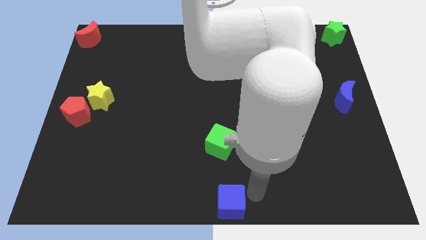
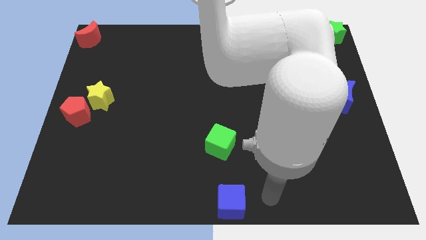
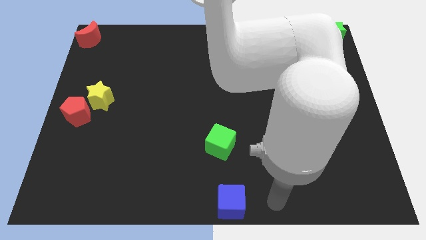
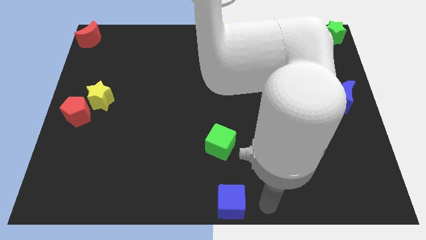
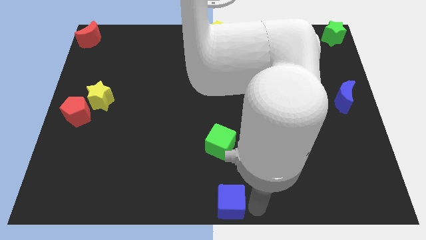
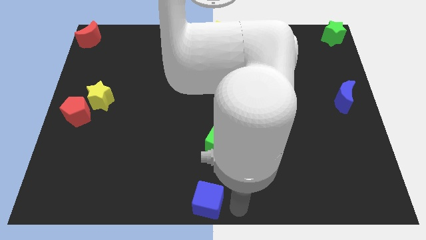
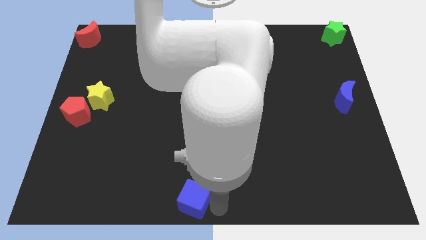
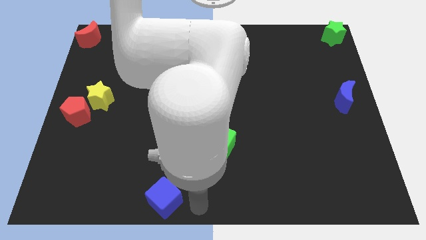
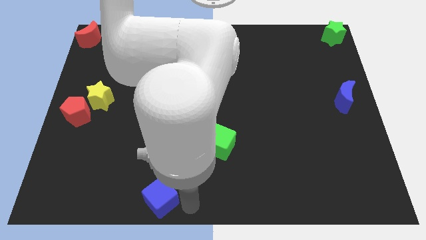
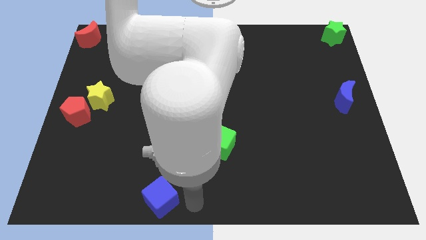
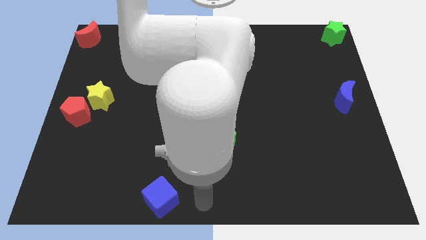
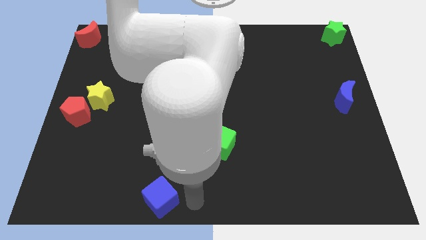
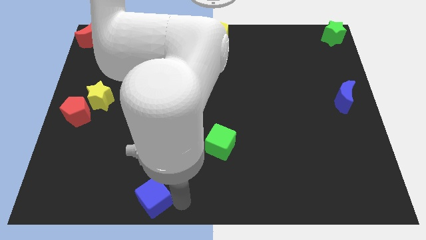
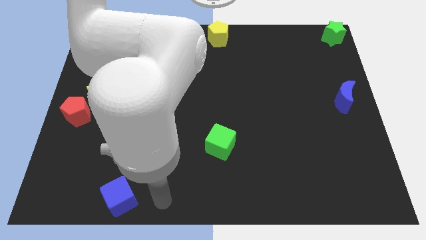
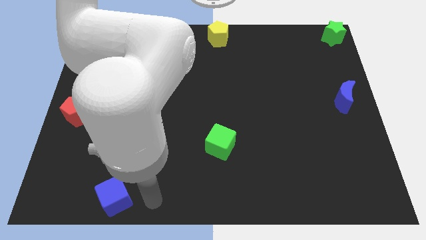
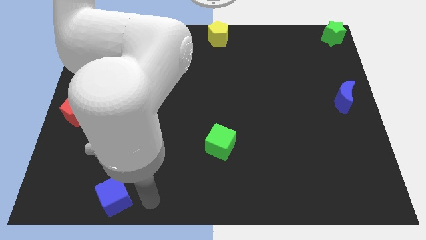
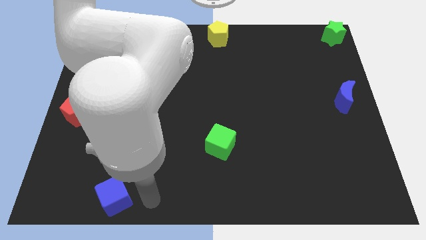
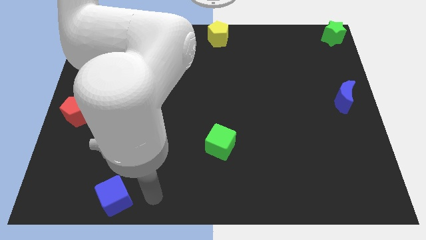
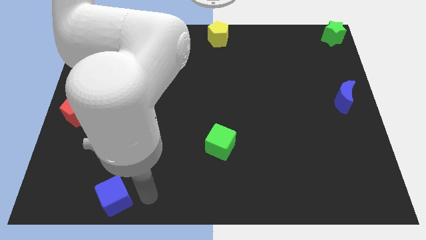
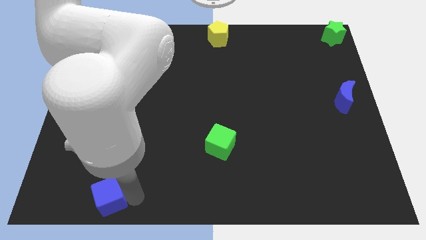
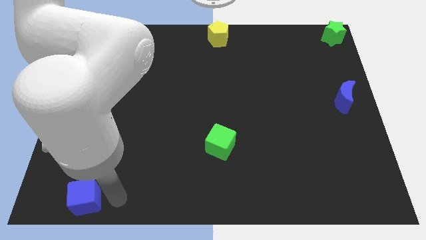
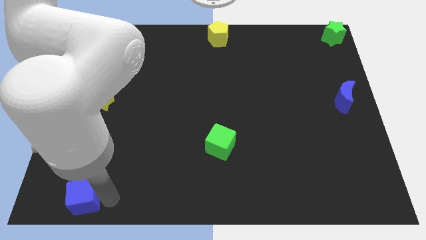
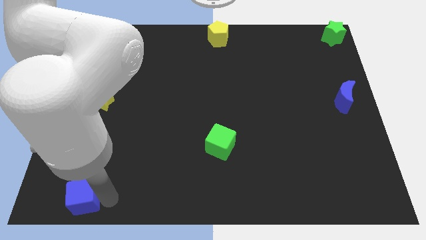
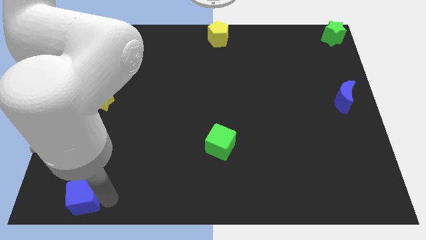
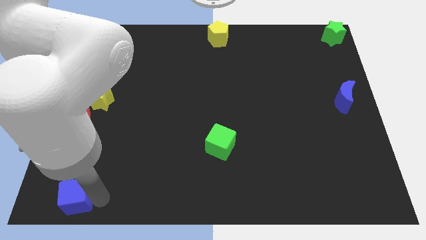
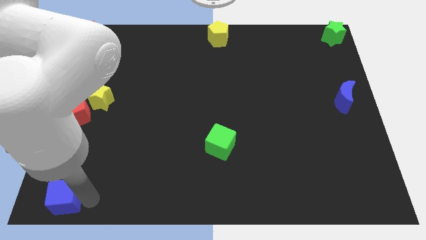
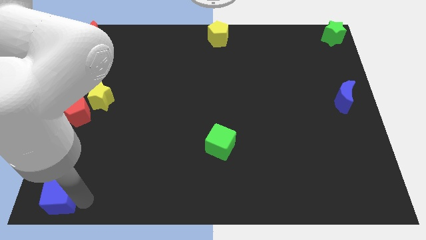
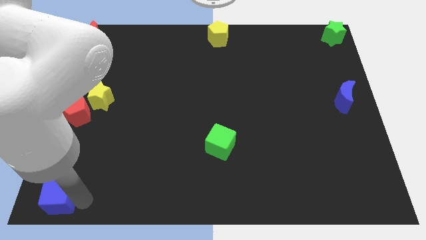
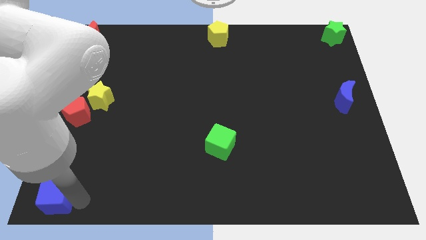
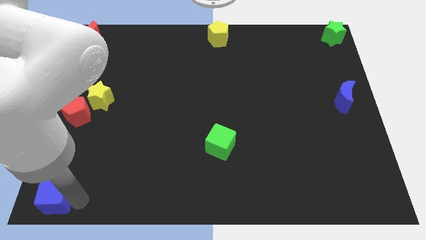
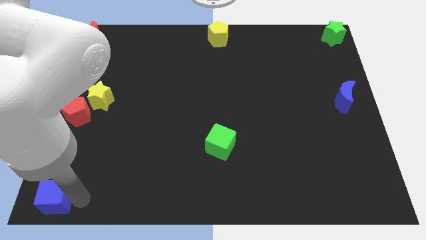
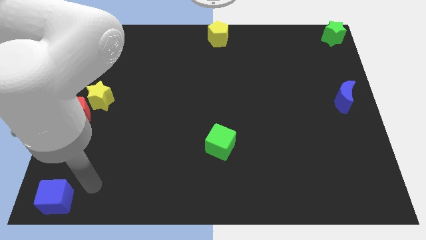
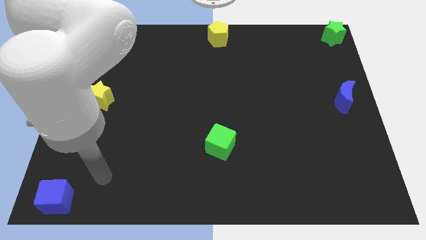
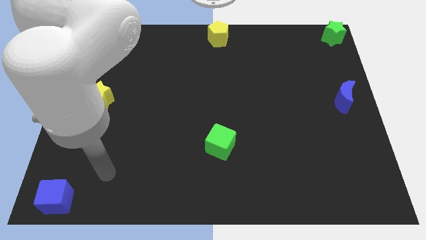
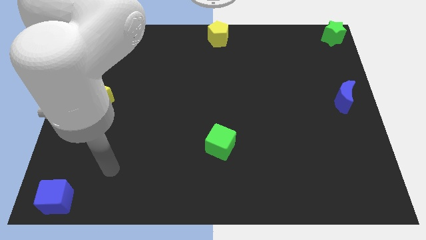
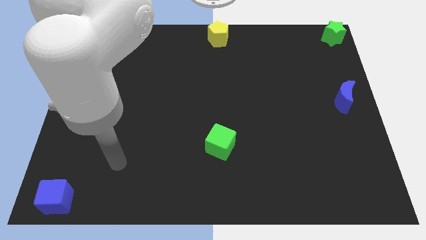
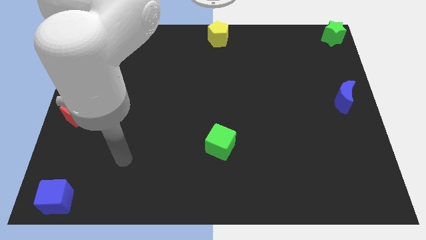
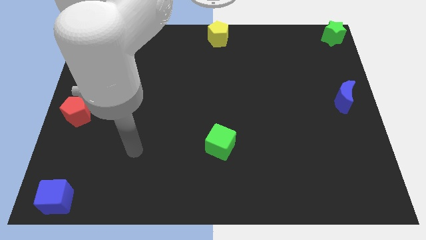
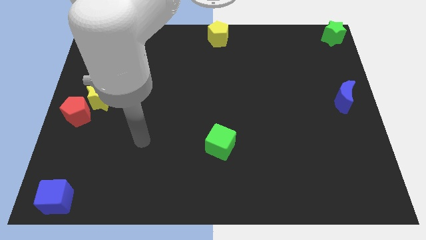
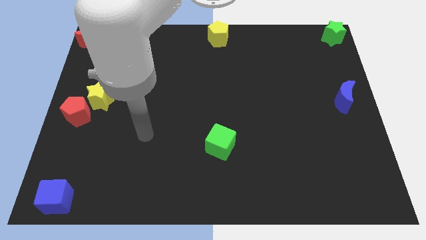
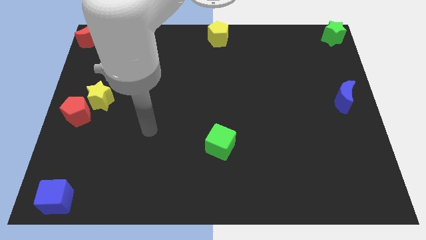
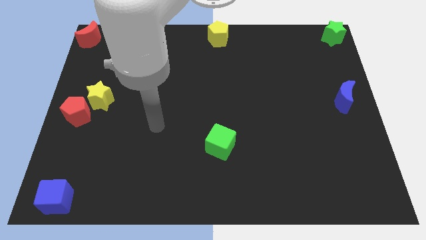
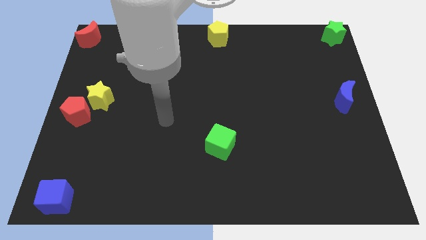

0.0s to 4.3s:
push the blue square towards the bottom left side corner

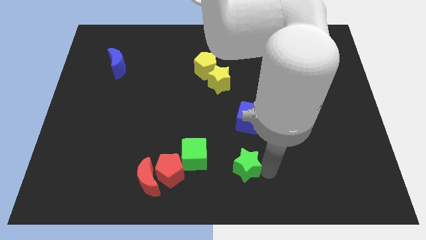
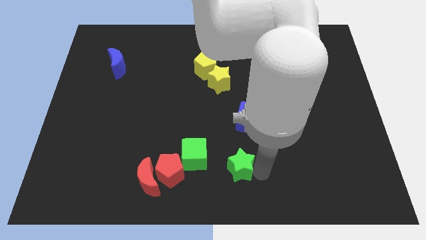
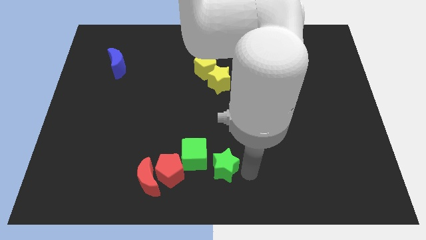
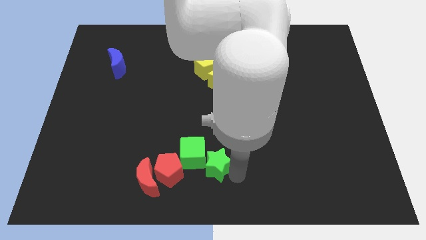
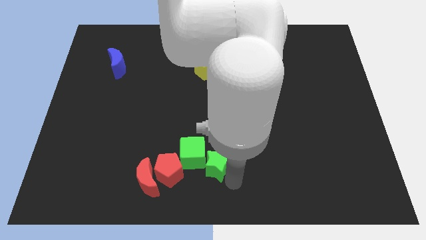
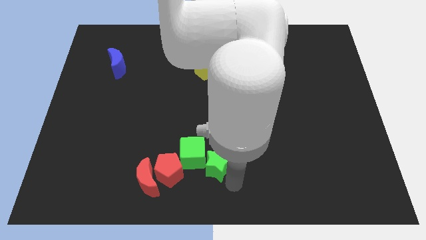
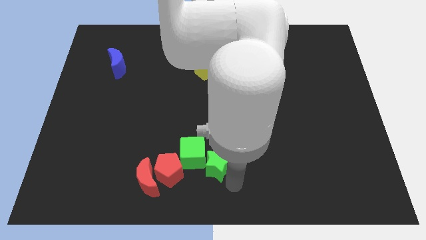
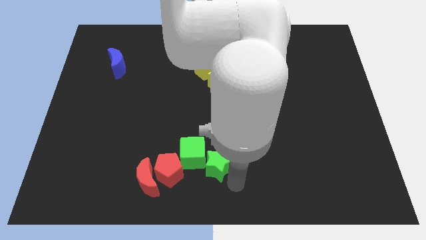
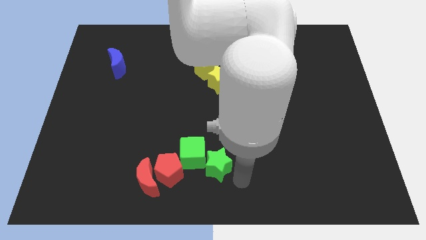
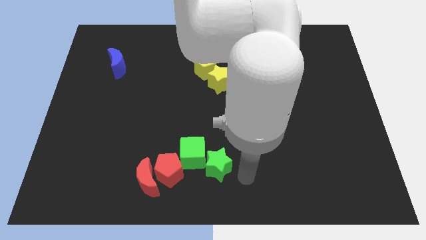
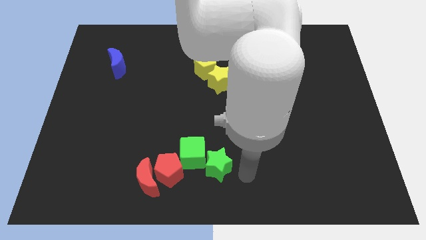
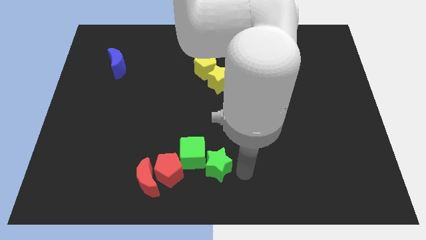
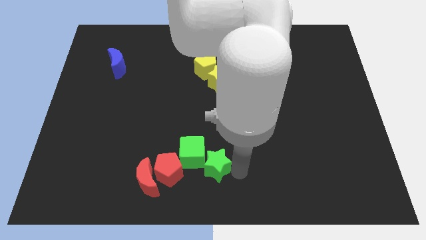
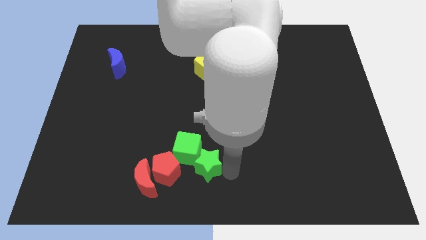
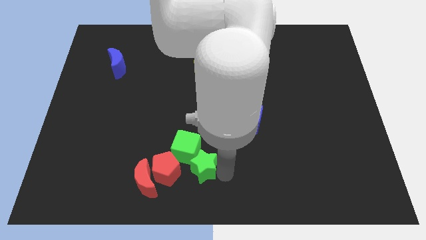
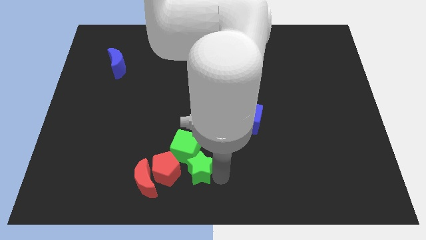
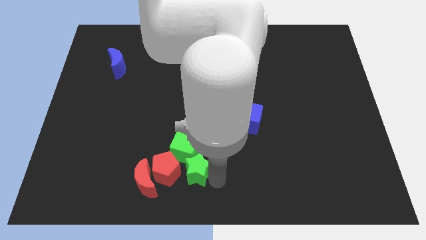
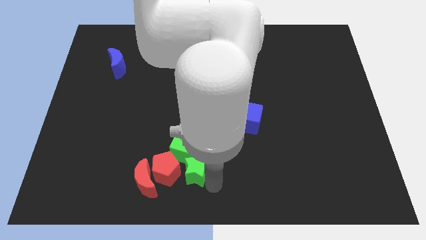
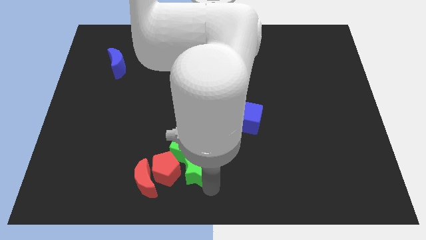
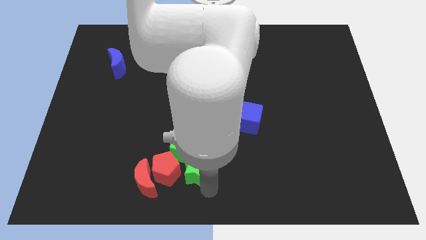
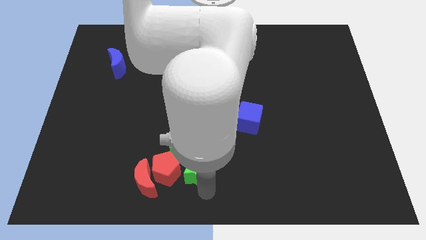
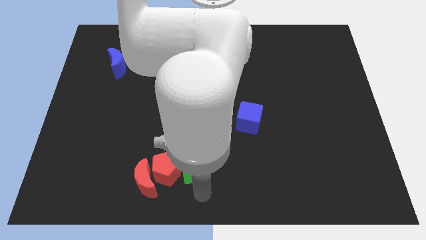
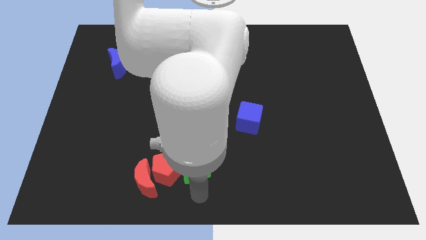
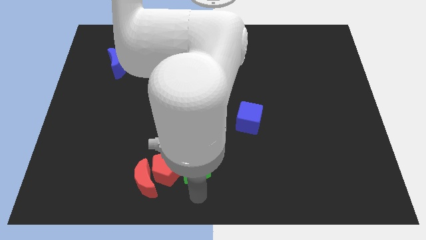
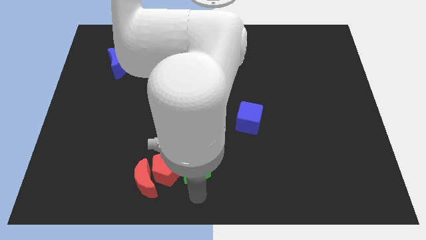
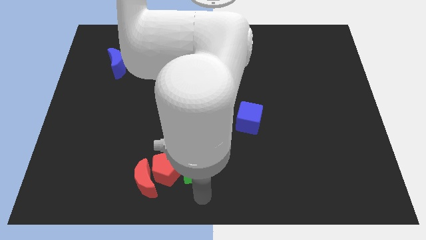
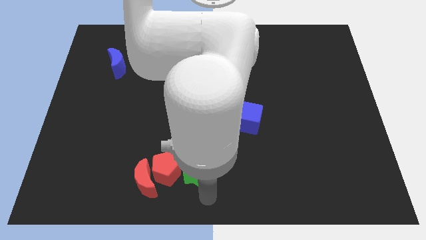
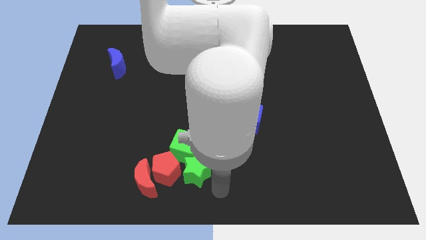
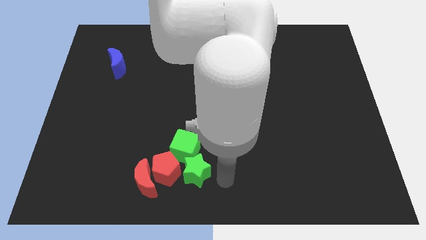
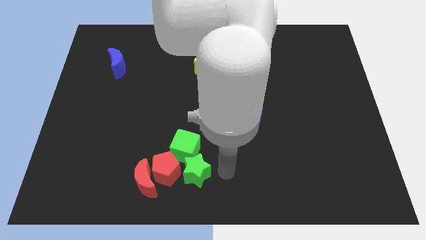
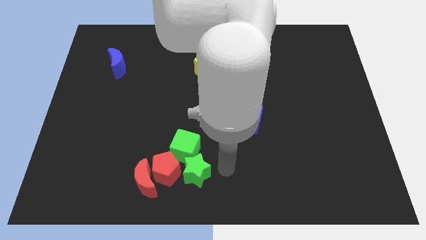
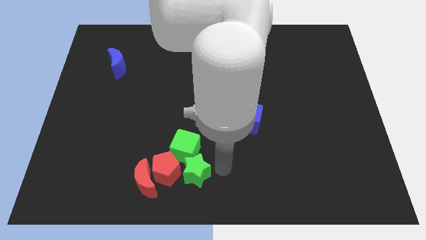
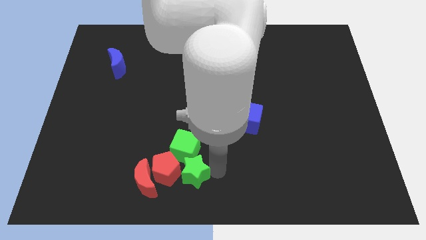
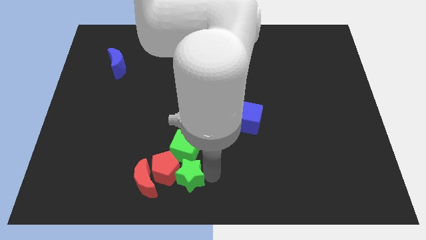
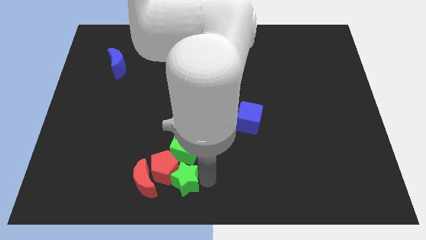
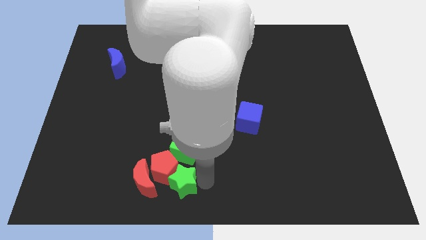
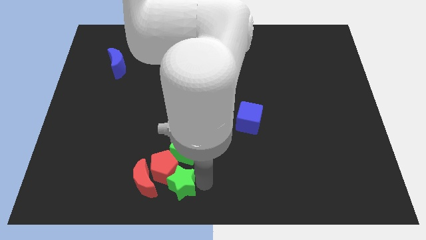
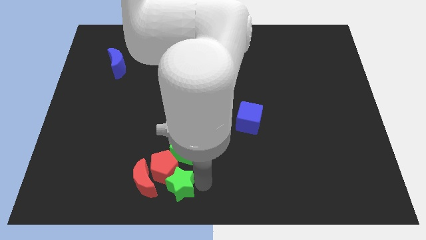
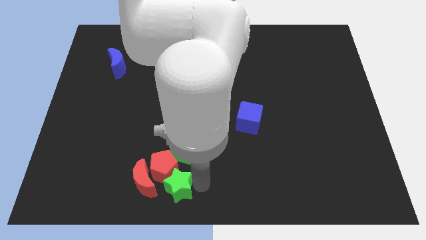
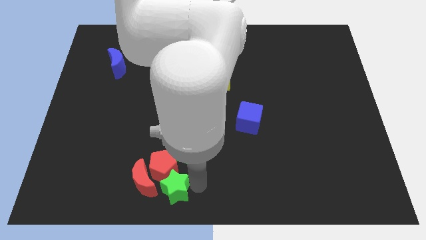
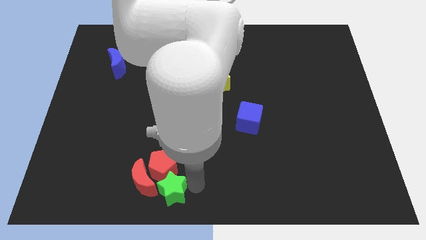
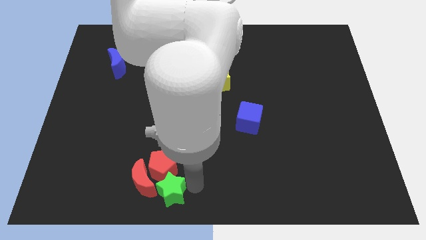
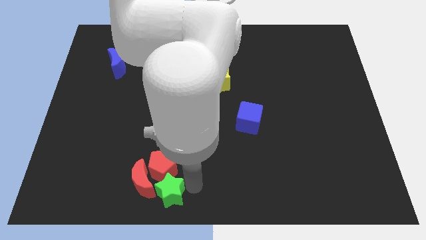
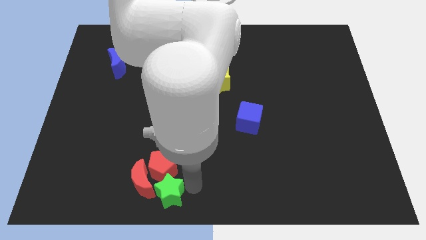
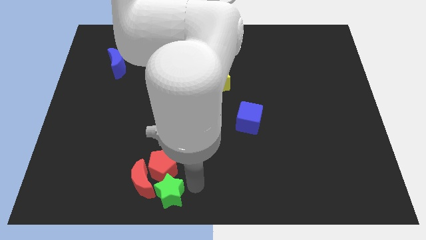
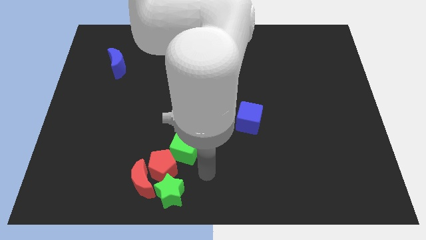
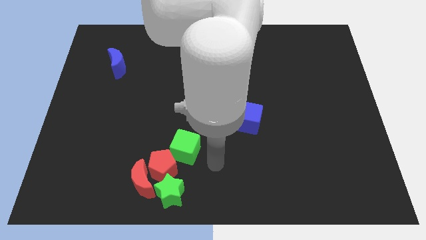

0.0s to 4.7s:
push the green star to the bottom side of the red pentagon
